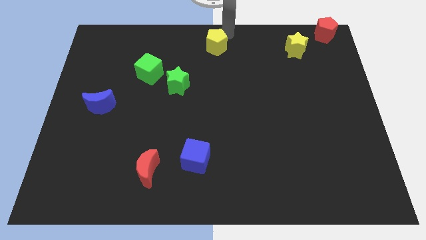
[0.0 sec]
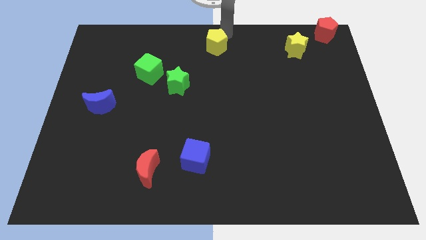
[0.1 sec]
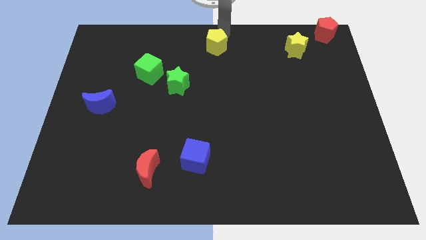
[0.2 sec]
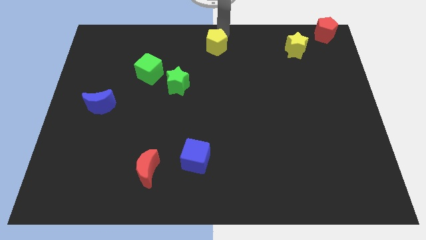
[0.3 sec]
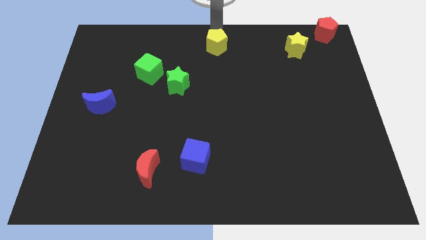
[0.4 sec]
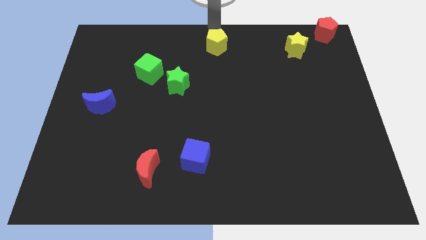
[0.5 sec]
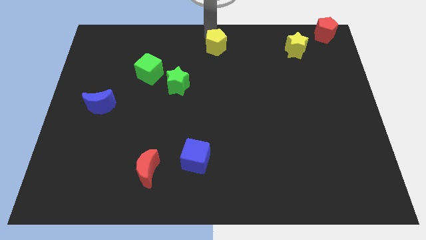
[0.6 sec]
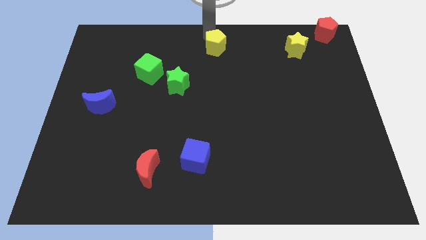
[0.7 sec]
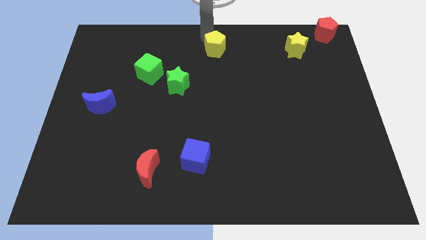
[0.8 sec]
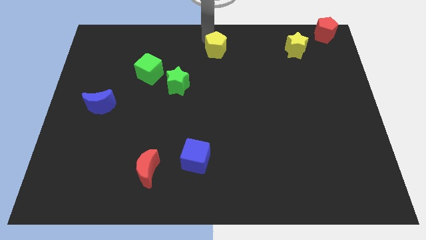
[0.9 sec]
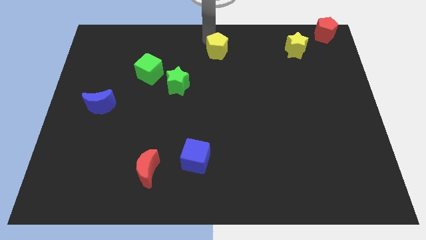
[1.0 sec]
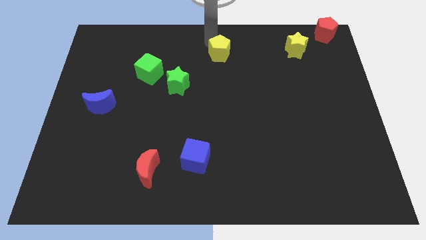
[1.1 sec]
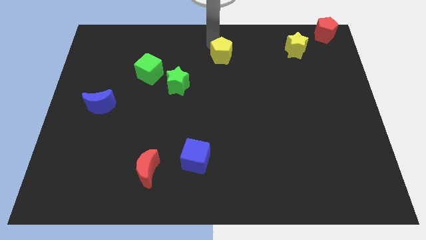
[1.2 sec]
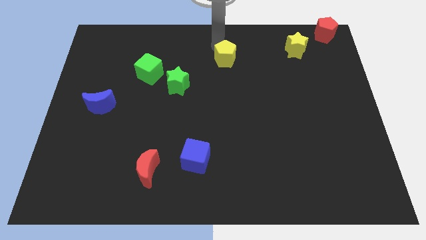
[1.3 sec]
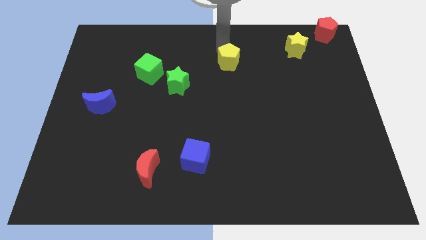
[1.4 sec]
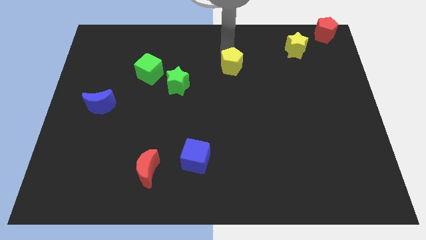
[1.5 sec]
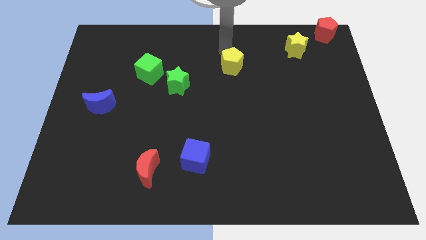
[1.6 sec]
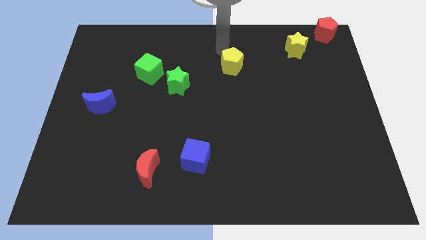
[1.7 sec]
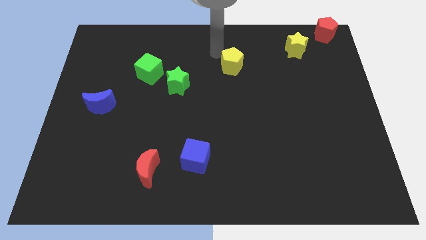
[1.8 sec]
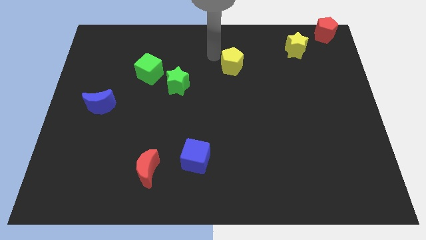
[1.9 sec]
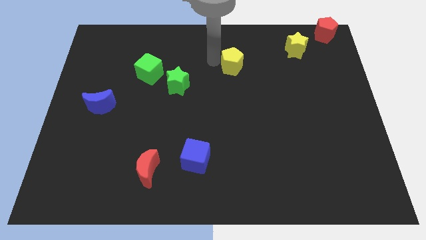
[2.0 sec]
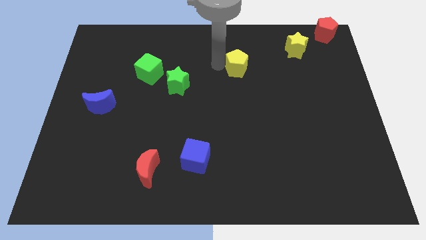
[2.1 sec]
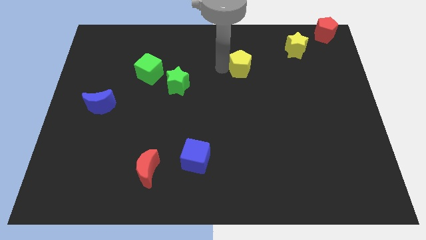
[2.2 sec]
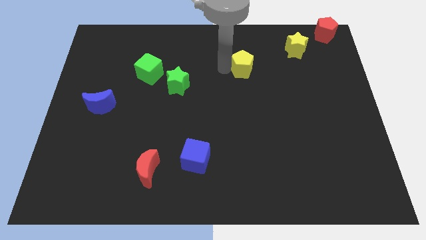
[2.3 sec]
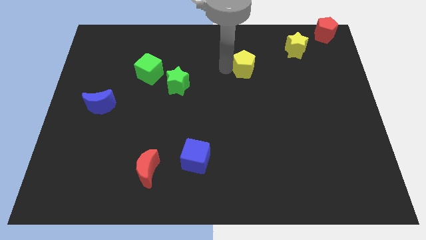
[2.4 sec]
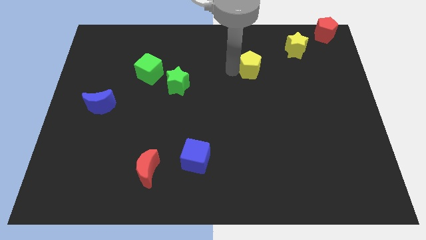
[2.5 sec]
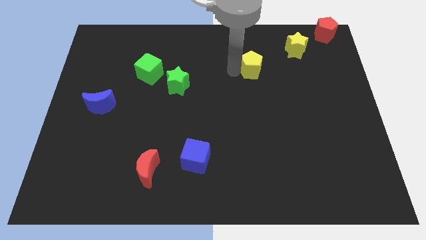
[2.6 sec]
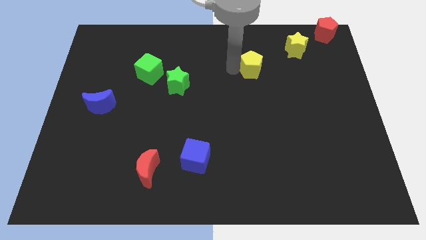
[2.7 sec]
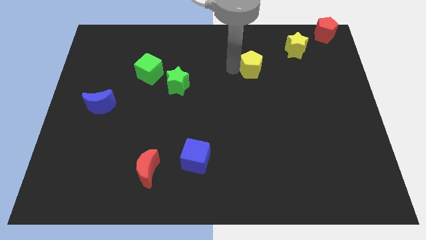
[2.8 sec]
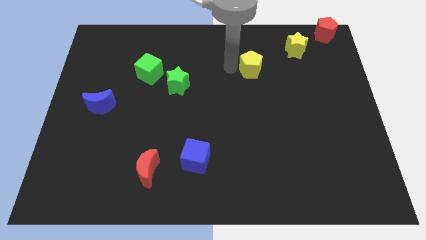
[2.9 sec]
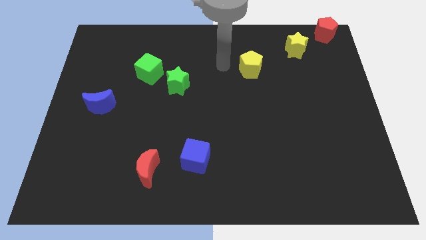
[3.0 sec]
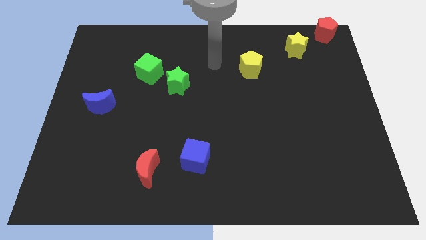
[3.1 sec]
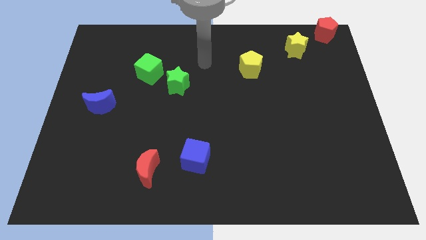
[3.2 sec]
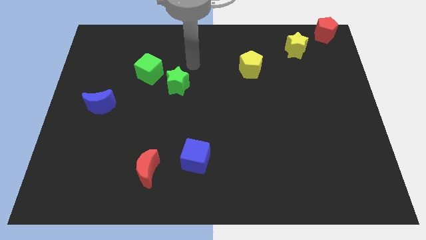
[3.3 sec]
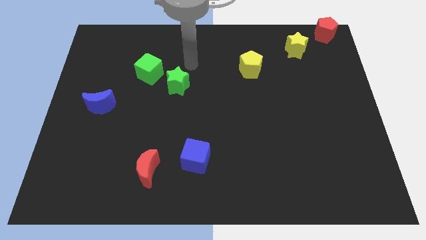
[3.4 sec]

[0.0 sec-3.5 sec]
slide the yellow pentagon diagonally on the bottom left side of the yellow star

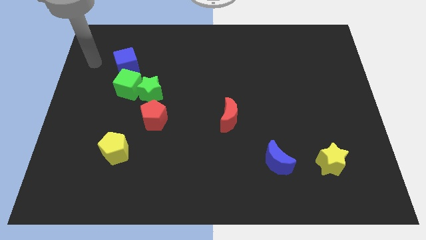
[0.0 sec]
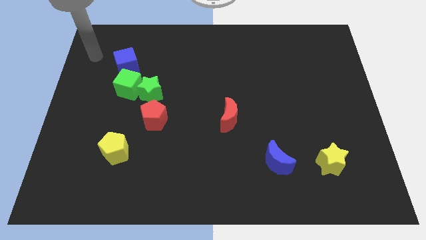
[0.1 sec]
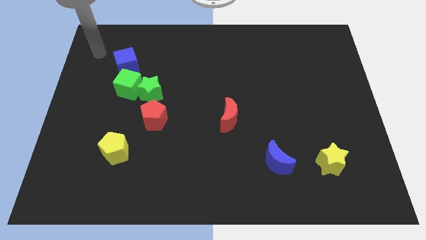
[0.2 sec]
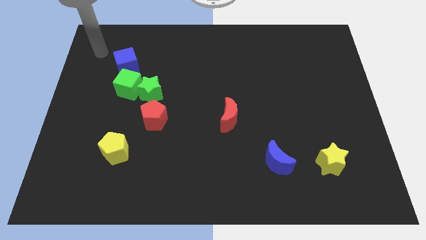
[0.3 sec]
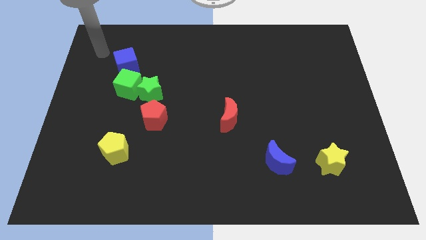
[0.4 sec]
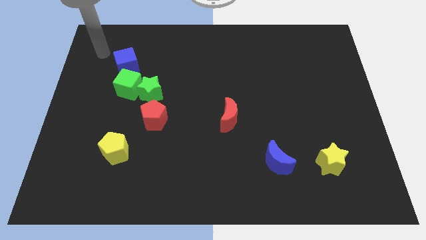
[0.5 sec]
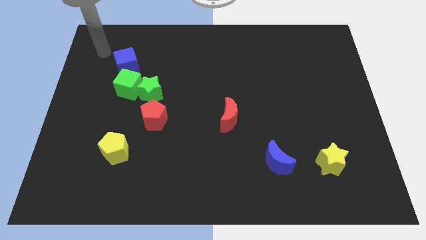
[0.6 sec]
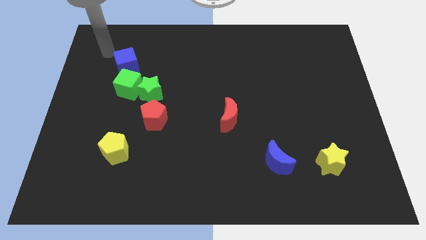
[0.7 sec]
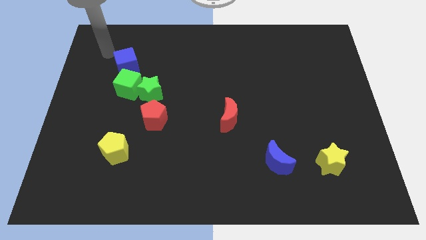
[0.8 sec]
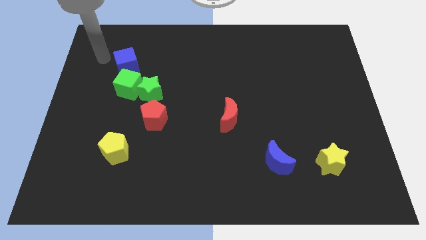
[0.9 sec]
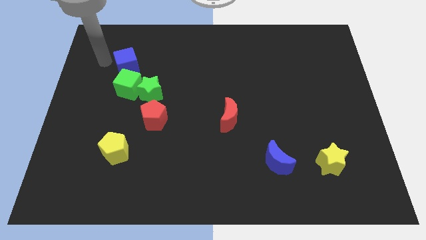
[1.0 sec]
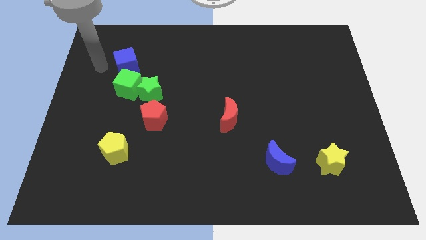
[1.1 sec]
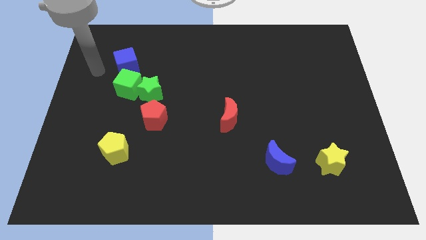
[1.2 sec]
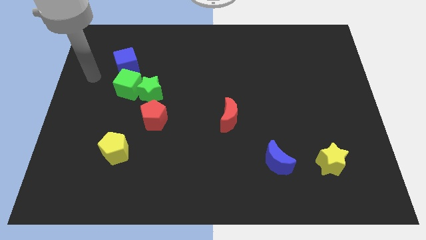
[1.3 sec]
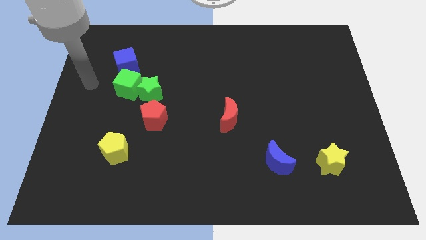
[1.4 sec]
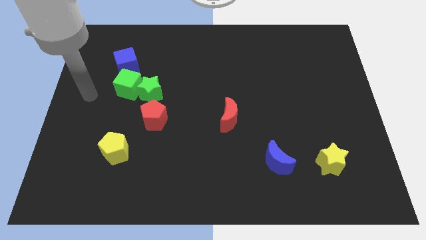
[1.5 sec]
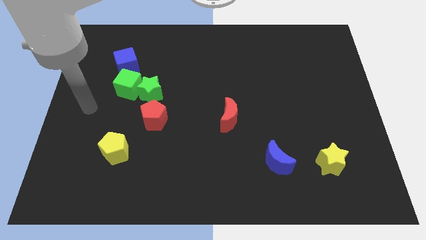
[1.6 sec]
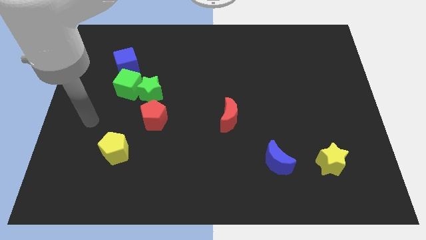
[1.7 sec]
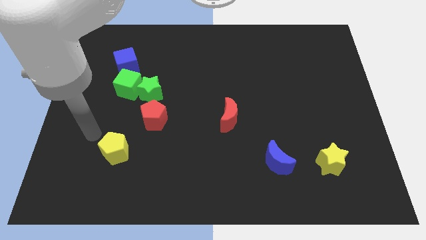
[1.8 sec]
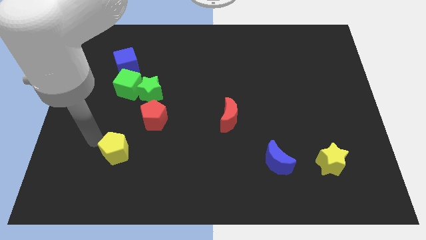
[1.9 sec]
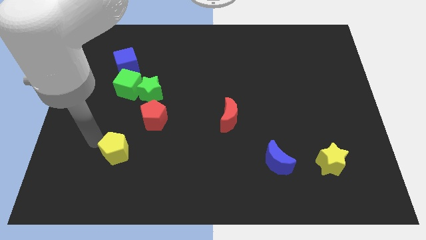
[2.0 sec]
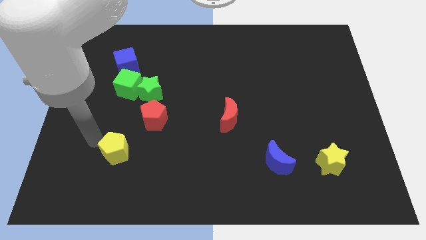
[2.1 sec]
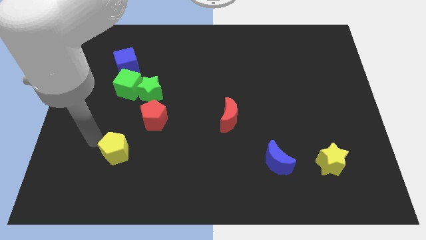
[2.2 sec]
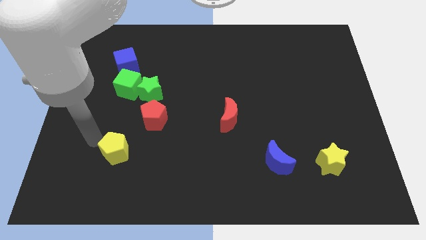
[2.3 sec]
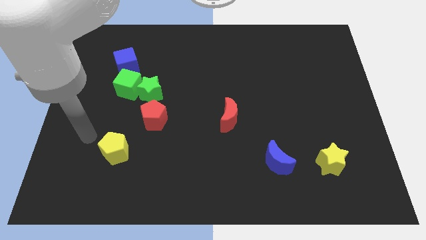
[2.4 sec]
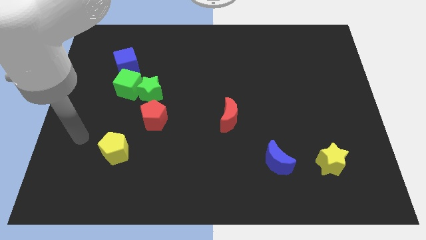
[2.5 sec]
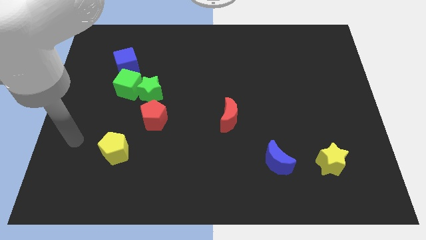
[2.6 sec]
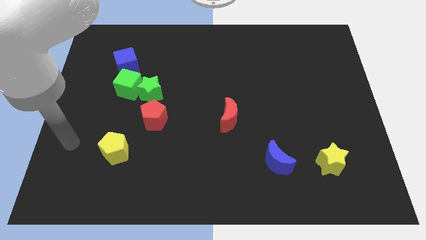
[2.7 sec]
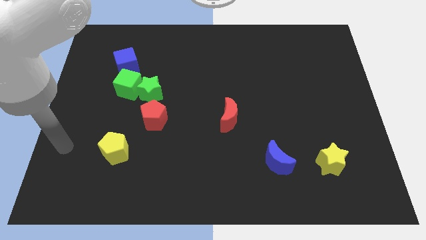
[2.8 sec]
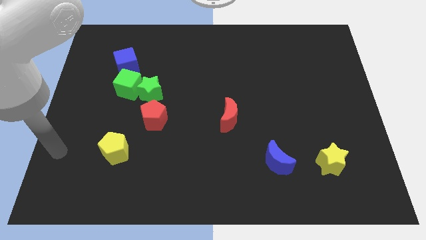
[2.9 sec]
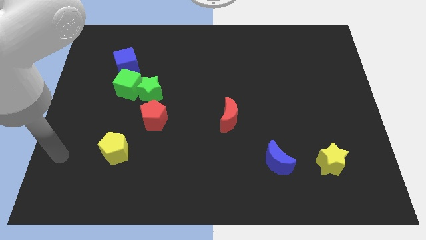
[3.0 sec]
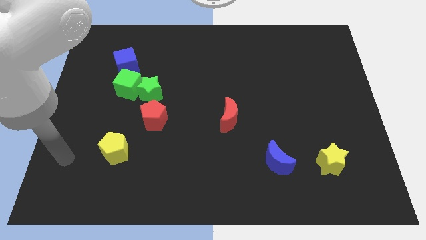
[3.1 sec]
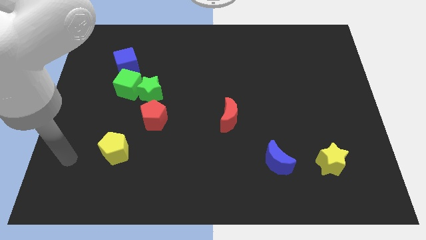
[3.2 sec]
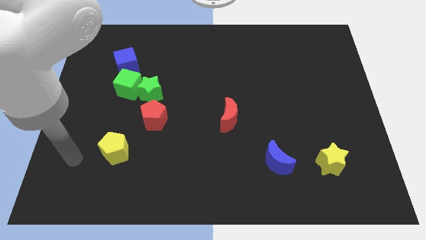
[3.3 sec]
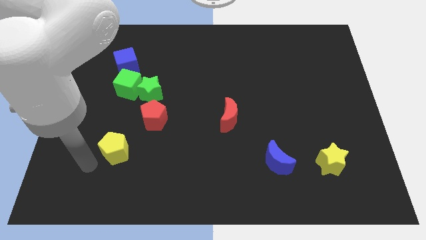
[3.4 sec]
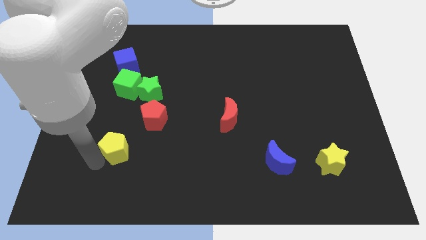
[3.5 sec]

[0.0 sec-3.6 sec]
place arm on the top left of yellow pentagon

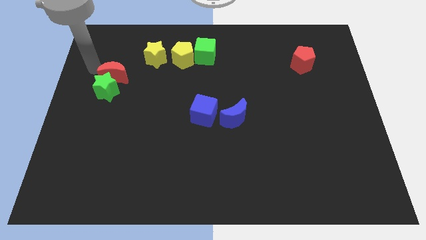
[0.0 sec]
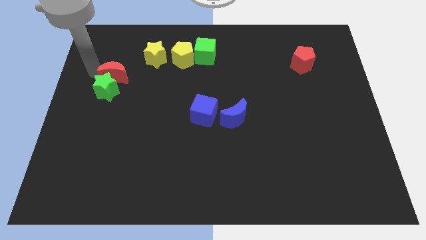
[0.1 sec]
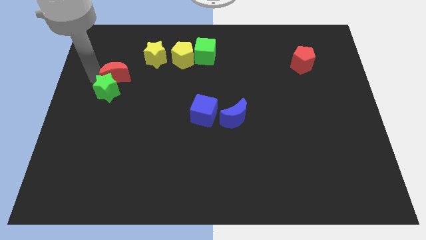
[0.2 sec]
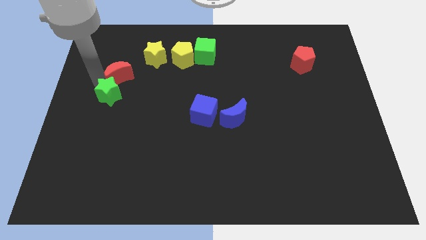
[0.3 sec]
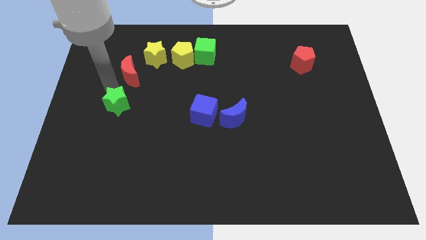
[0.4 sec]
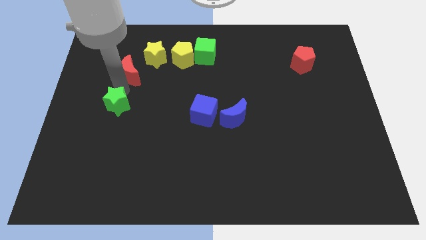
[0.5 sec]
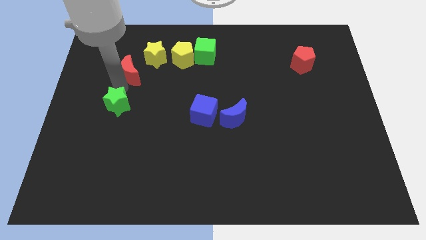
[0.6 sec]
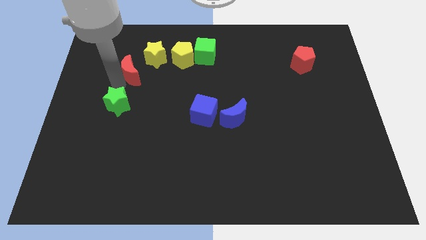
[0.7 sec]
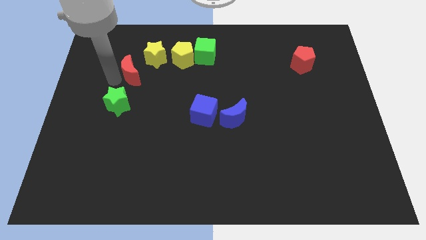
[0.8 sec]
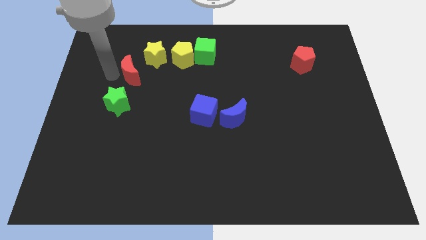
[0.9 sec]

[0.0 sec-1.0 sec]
separate red moon and green star

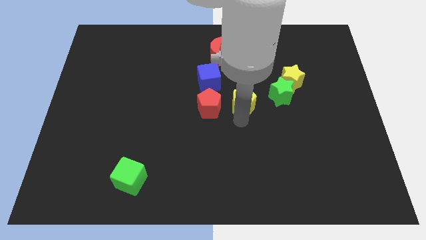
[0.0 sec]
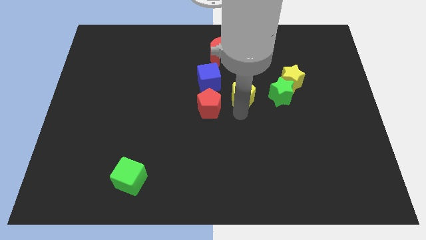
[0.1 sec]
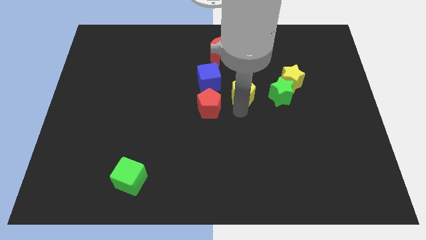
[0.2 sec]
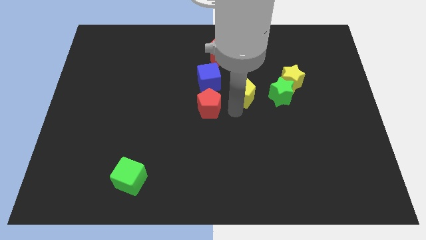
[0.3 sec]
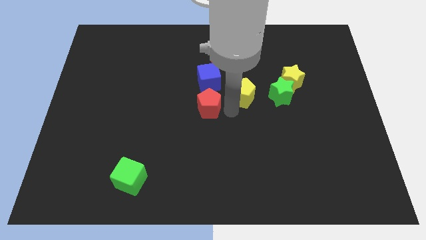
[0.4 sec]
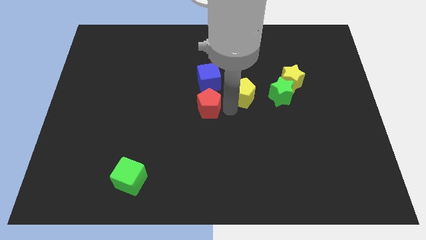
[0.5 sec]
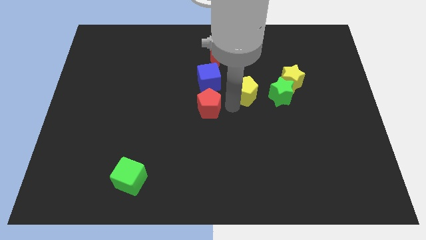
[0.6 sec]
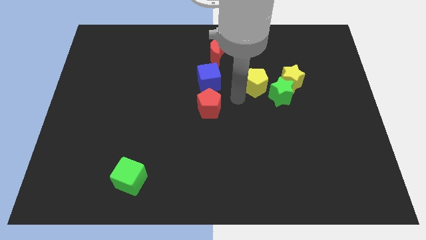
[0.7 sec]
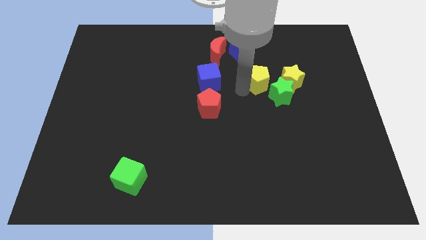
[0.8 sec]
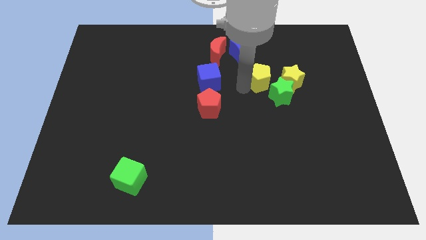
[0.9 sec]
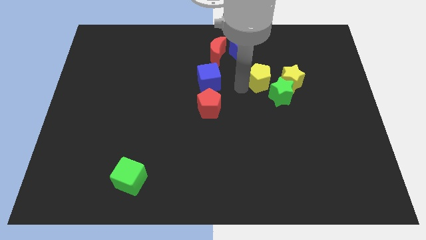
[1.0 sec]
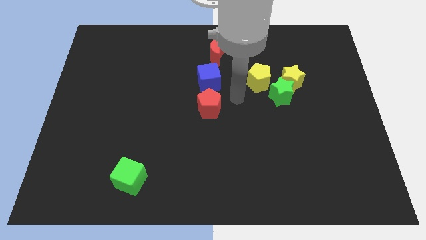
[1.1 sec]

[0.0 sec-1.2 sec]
move the yellow pentagon parallel to blue cube
